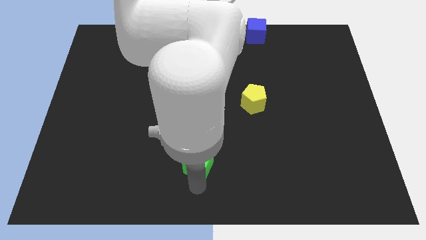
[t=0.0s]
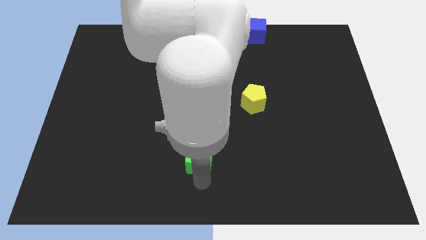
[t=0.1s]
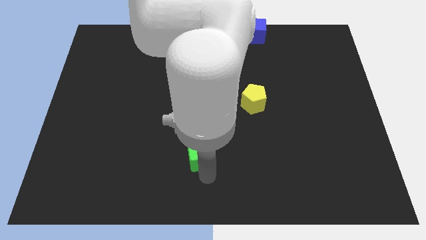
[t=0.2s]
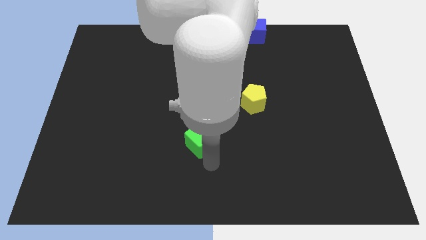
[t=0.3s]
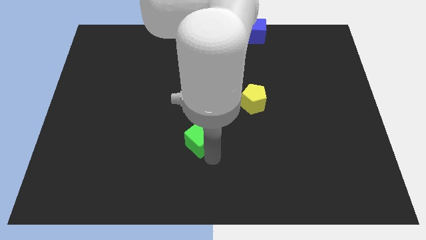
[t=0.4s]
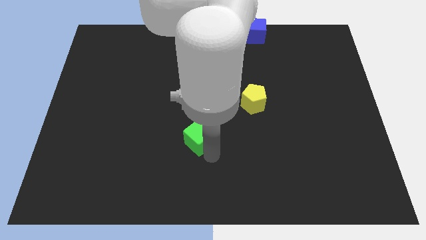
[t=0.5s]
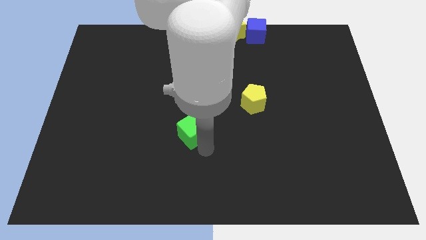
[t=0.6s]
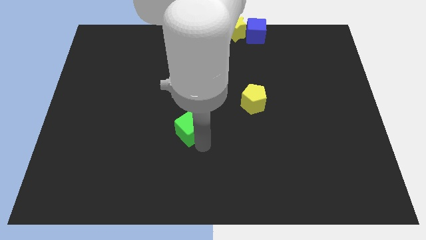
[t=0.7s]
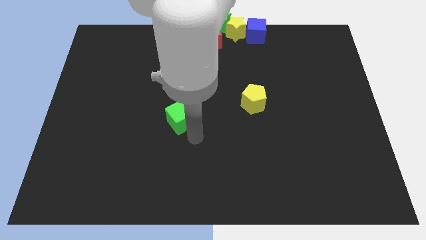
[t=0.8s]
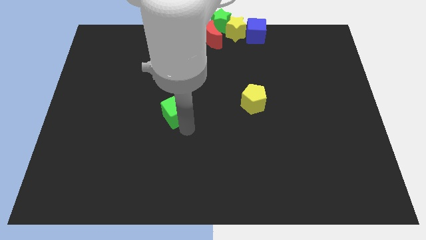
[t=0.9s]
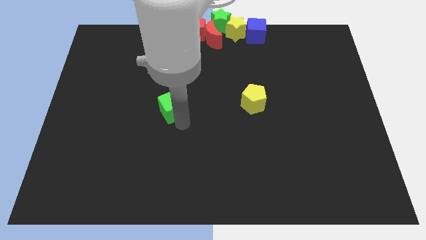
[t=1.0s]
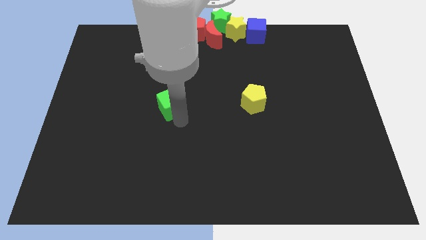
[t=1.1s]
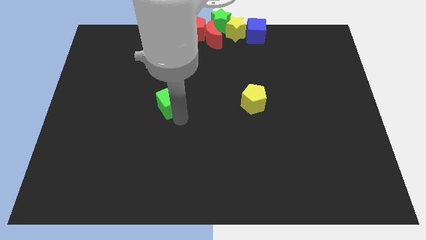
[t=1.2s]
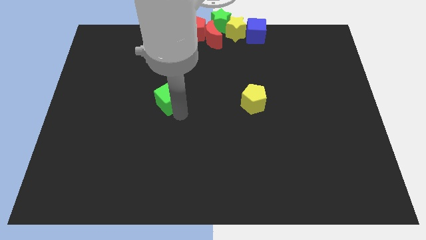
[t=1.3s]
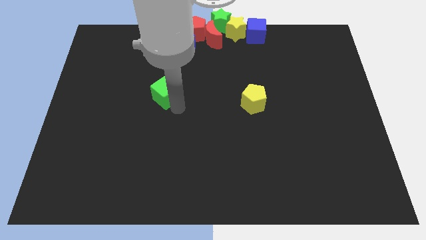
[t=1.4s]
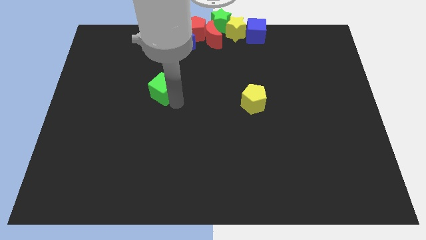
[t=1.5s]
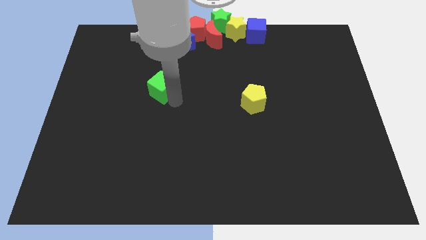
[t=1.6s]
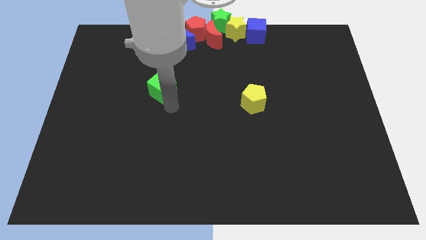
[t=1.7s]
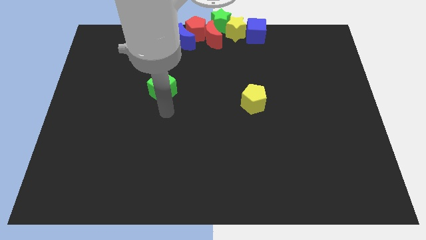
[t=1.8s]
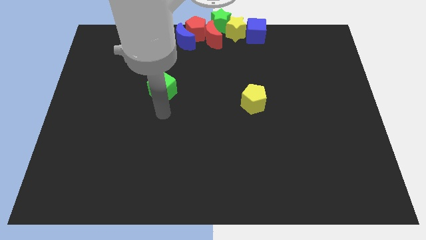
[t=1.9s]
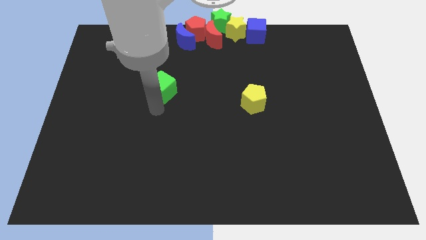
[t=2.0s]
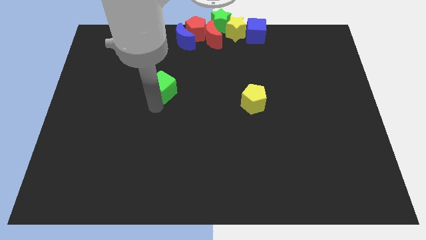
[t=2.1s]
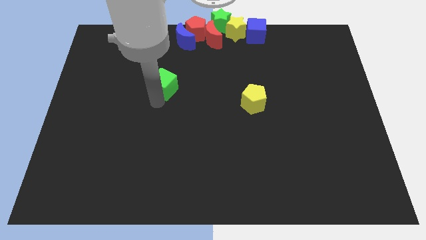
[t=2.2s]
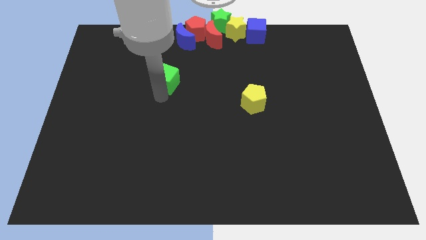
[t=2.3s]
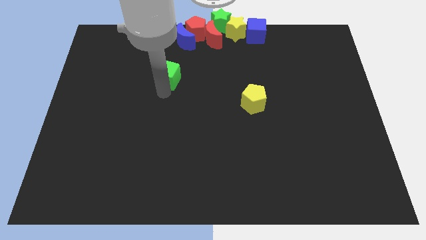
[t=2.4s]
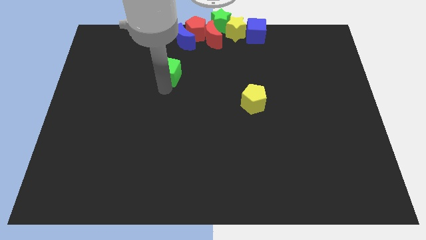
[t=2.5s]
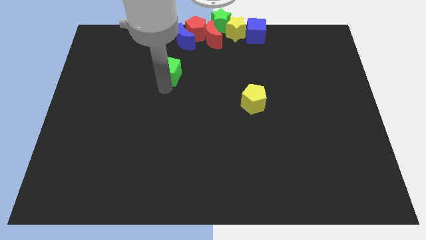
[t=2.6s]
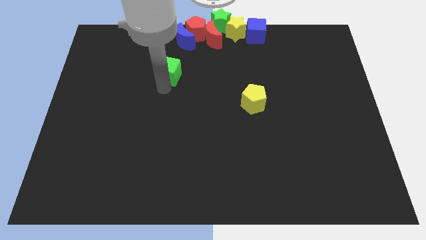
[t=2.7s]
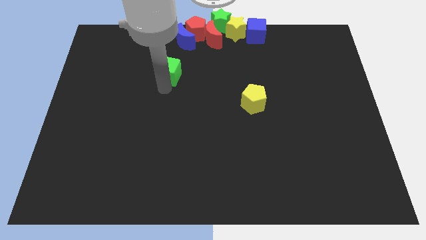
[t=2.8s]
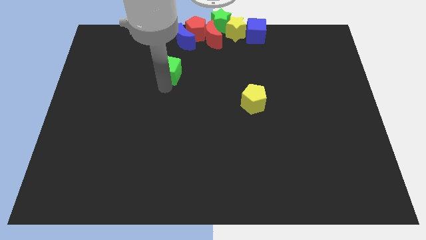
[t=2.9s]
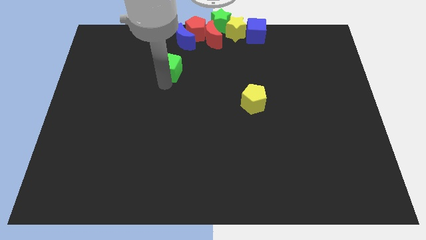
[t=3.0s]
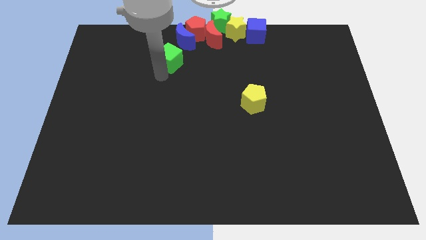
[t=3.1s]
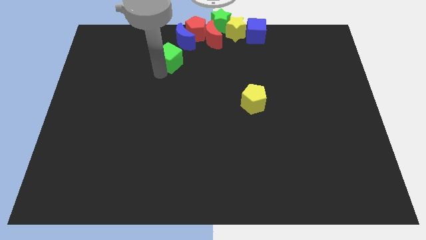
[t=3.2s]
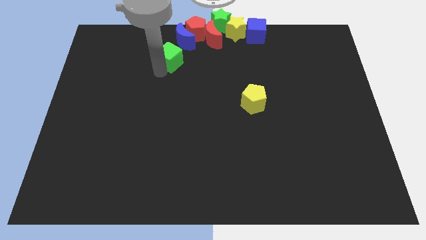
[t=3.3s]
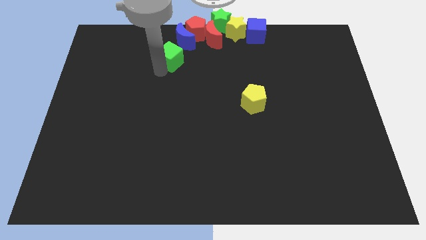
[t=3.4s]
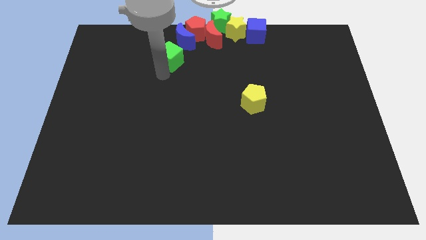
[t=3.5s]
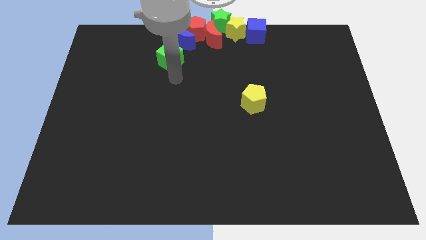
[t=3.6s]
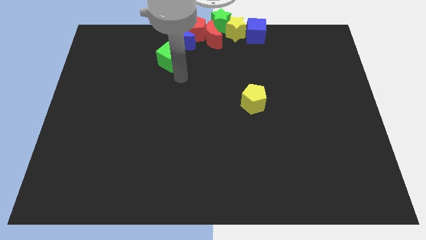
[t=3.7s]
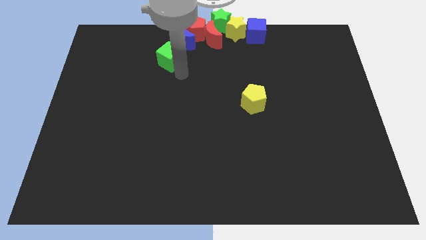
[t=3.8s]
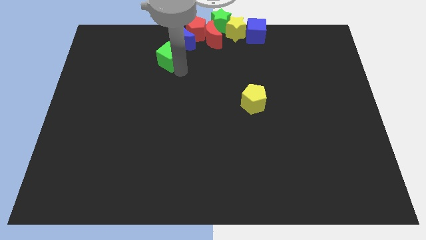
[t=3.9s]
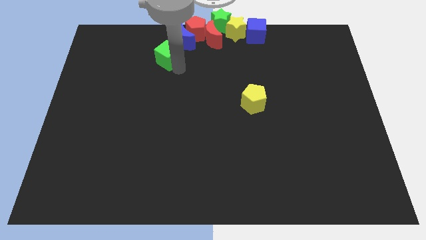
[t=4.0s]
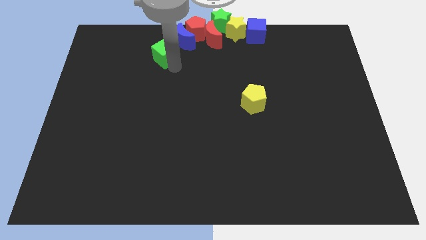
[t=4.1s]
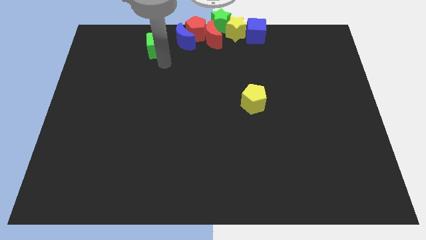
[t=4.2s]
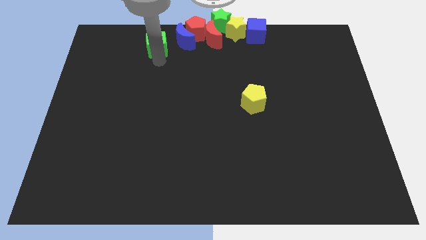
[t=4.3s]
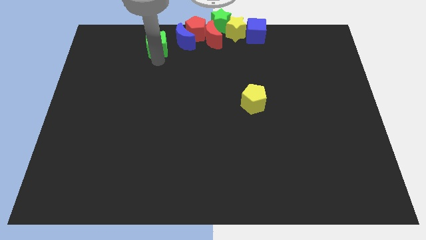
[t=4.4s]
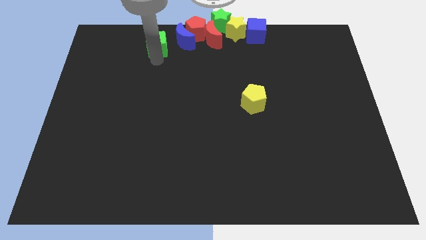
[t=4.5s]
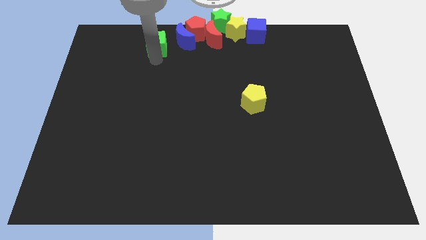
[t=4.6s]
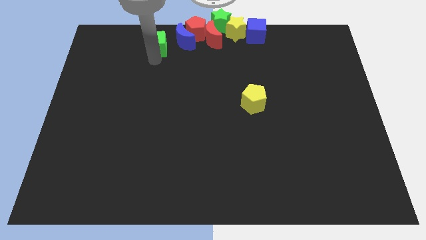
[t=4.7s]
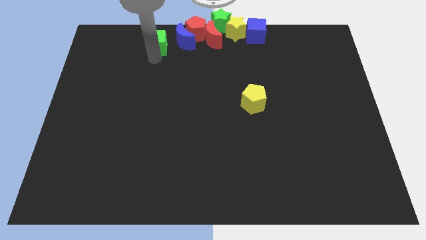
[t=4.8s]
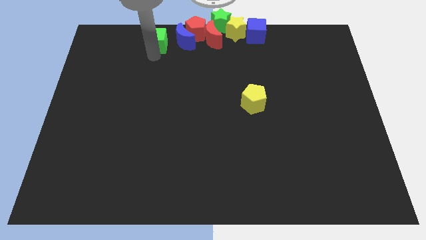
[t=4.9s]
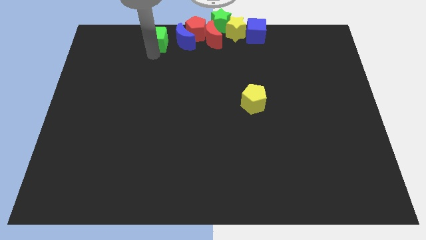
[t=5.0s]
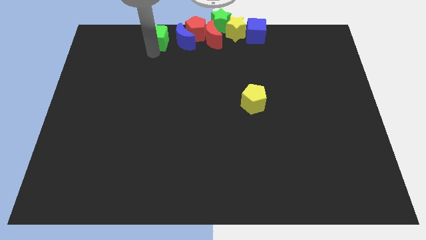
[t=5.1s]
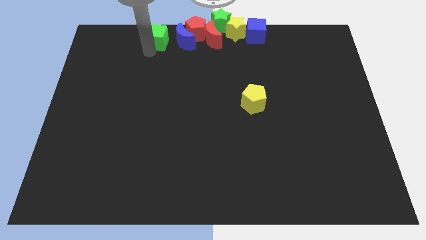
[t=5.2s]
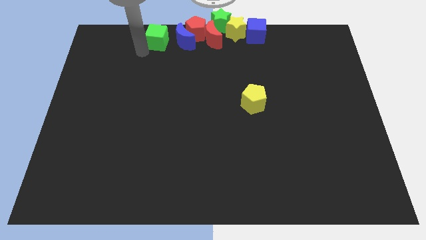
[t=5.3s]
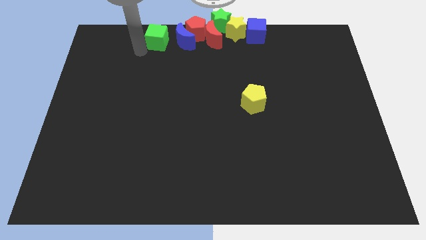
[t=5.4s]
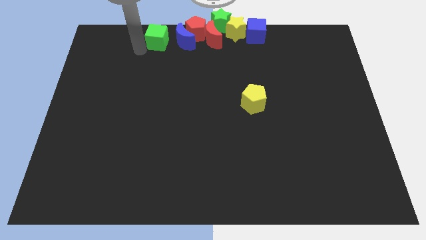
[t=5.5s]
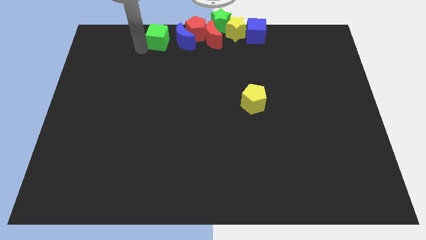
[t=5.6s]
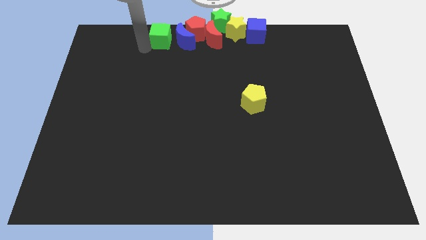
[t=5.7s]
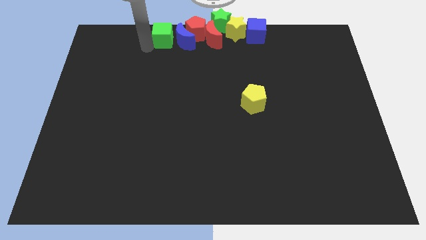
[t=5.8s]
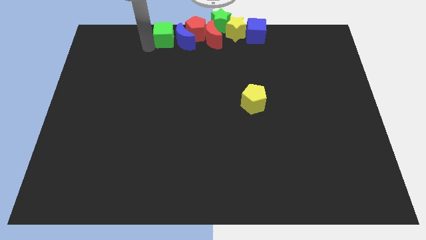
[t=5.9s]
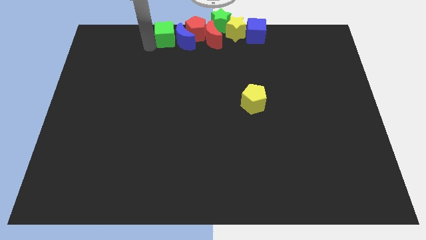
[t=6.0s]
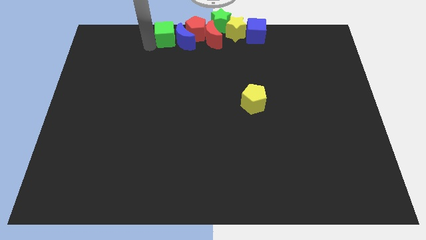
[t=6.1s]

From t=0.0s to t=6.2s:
place the green cube to the left of the blue moon

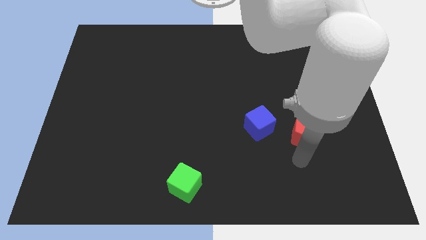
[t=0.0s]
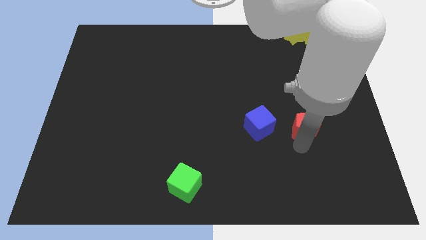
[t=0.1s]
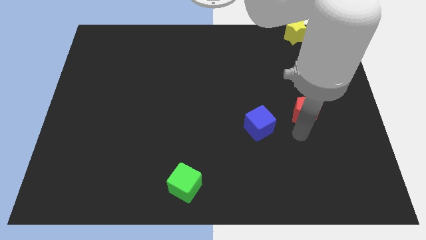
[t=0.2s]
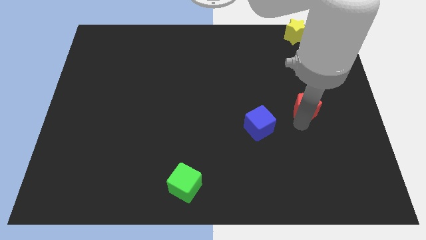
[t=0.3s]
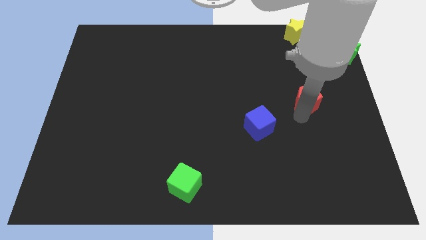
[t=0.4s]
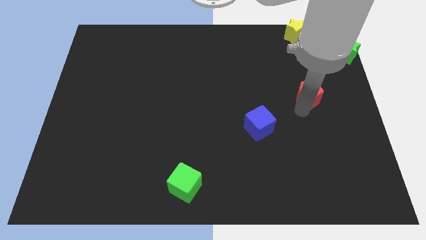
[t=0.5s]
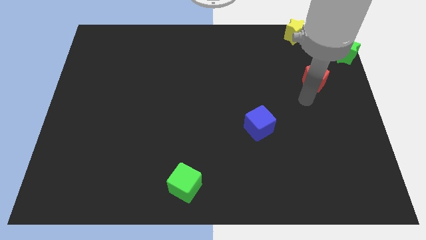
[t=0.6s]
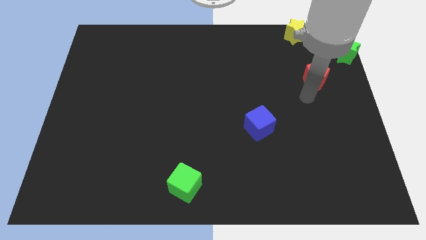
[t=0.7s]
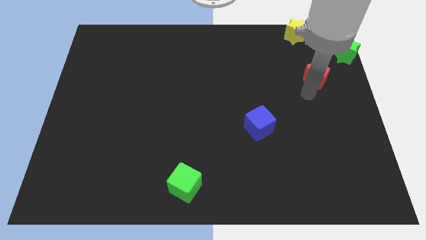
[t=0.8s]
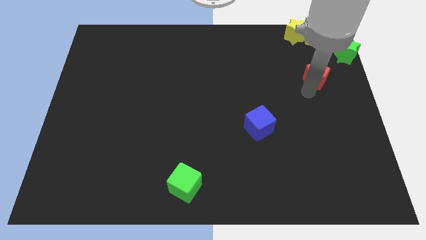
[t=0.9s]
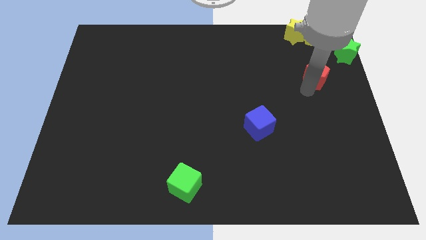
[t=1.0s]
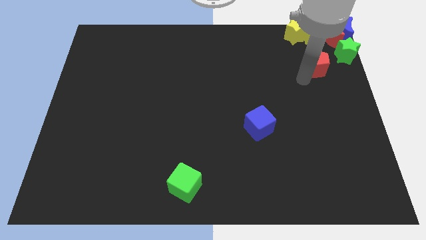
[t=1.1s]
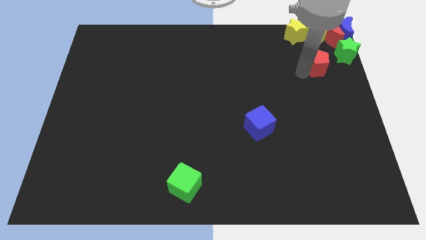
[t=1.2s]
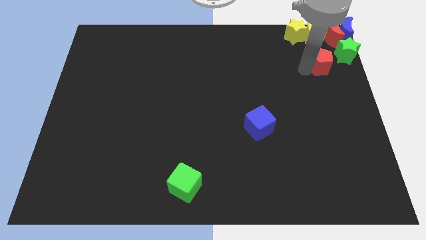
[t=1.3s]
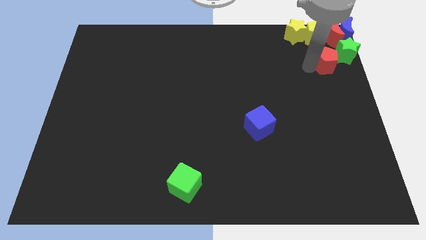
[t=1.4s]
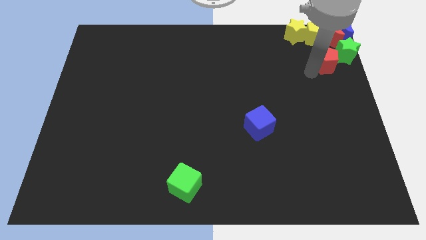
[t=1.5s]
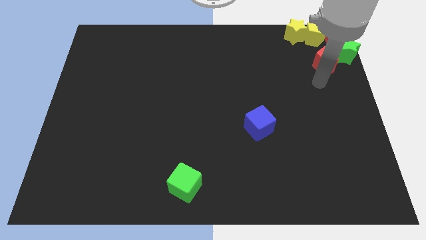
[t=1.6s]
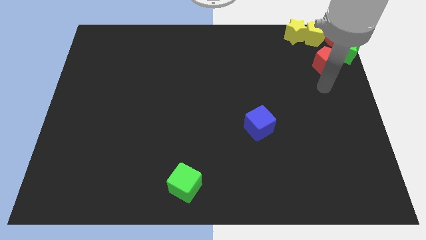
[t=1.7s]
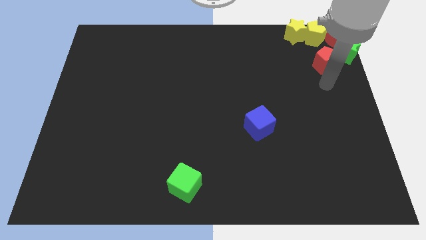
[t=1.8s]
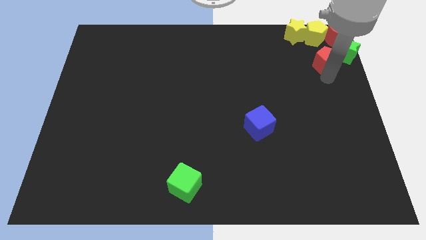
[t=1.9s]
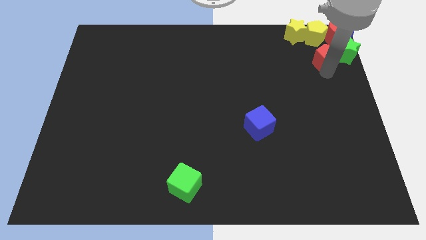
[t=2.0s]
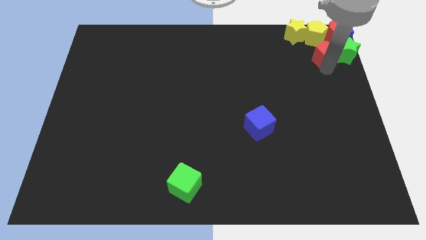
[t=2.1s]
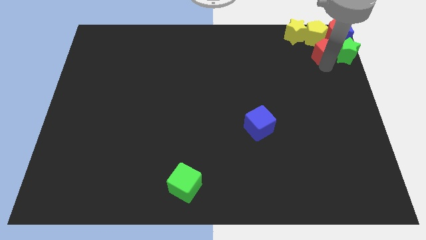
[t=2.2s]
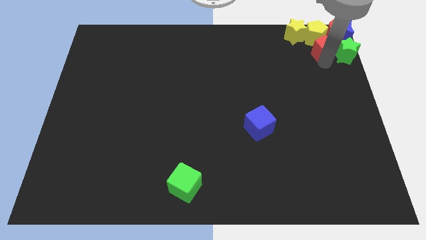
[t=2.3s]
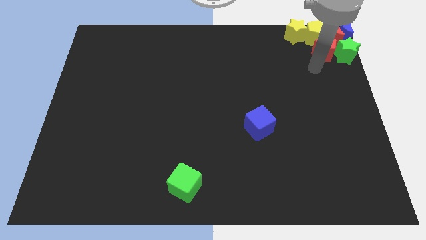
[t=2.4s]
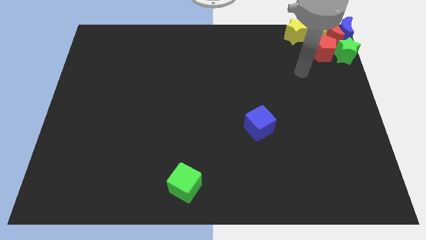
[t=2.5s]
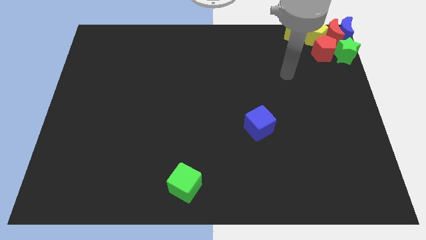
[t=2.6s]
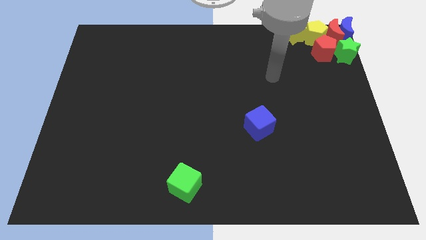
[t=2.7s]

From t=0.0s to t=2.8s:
put the red pentagon to the left of the green star
